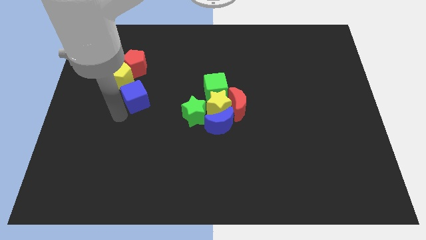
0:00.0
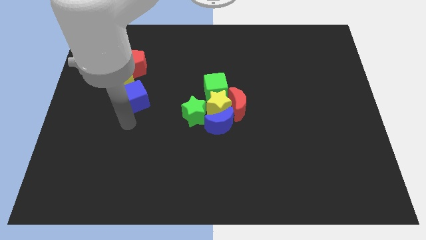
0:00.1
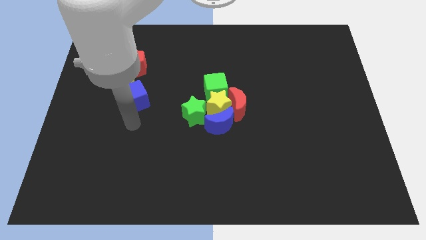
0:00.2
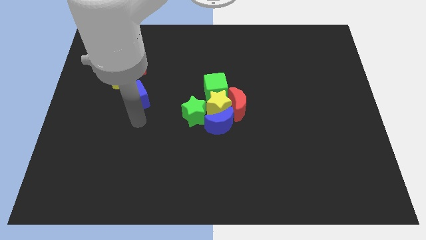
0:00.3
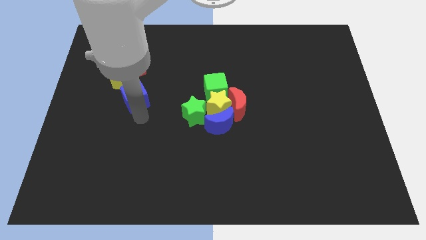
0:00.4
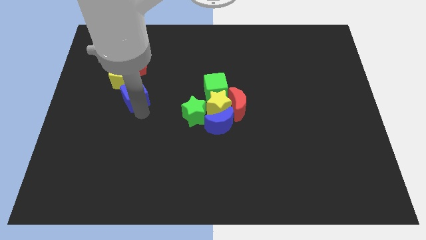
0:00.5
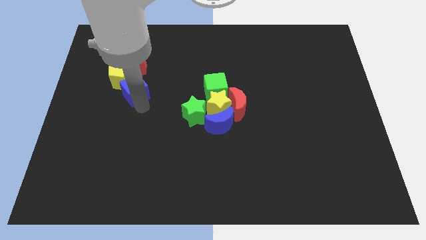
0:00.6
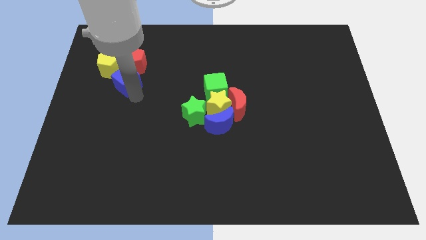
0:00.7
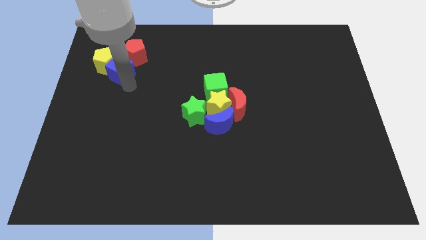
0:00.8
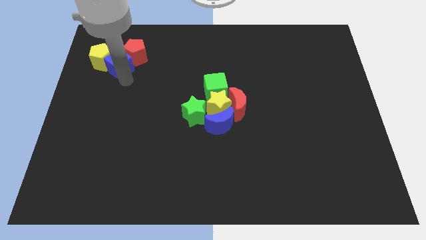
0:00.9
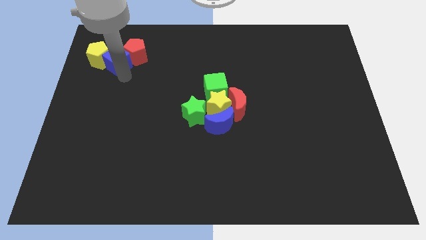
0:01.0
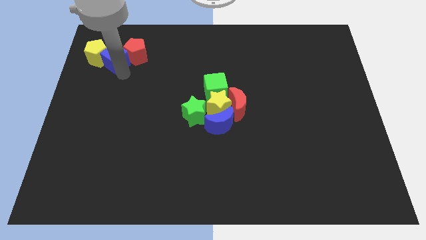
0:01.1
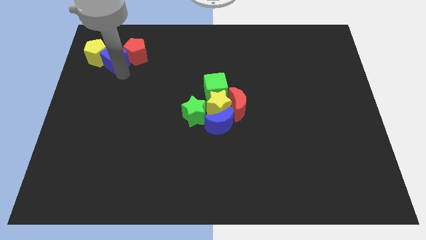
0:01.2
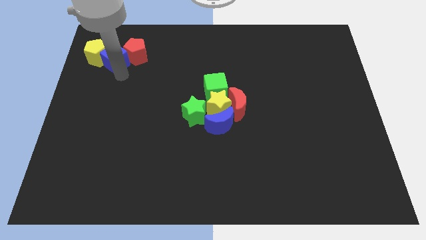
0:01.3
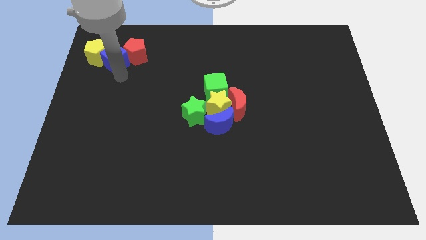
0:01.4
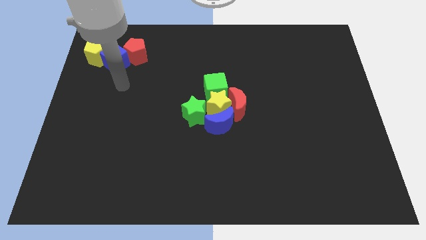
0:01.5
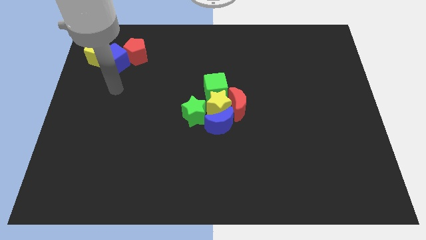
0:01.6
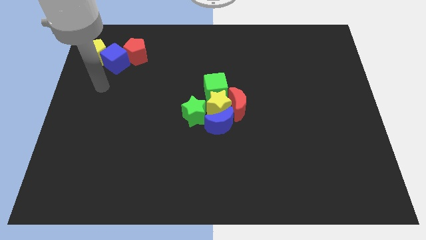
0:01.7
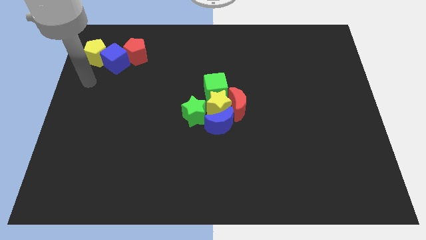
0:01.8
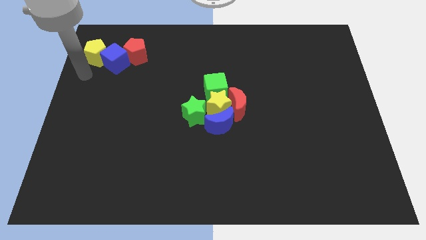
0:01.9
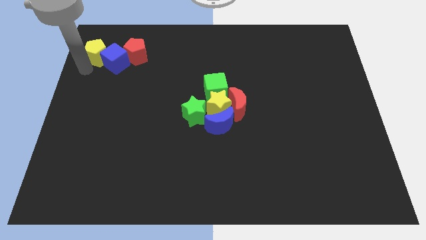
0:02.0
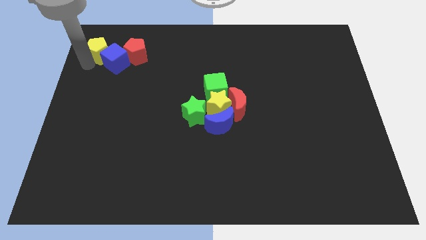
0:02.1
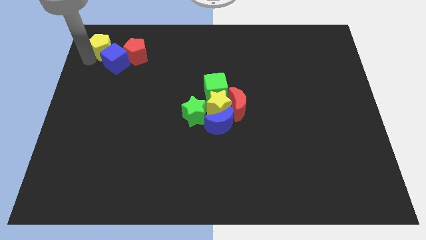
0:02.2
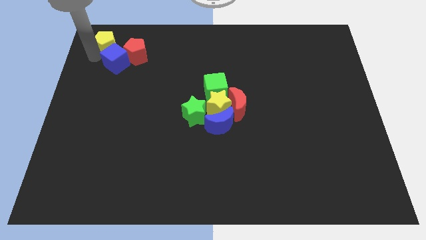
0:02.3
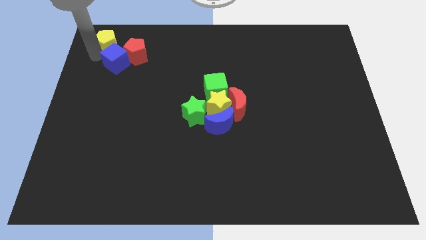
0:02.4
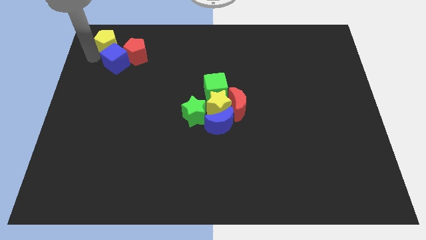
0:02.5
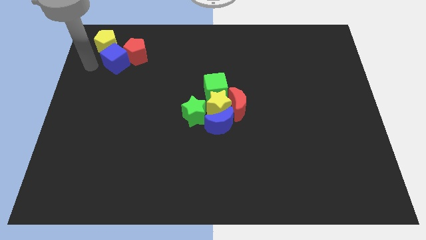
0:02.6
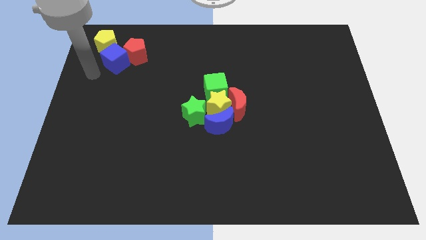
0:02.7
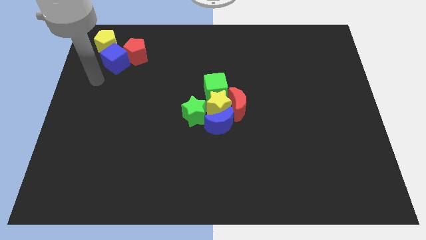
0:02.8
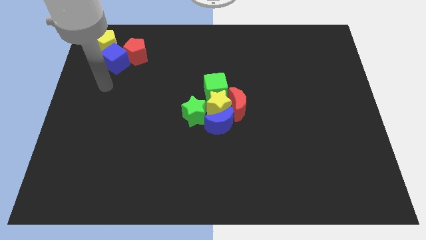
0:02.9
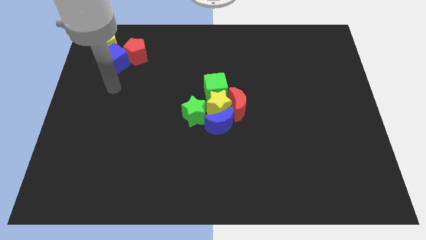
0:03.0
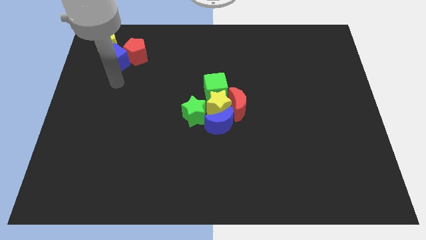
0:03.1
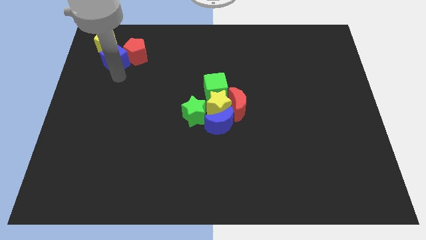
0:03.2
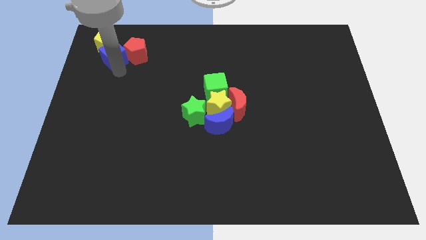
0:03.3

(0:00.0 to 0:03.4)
push the blue cube slightly upwards

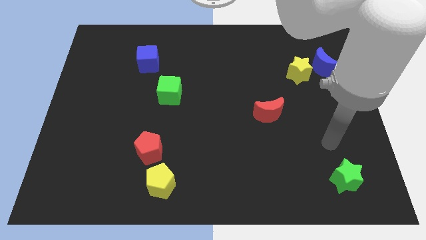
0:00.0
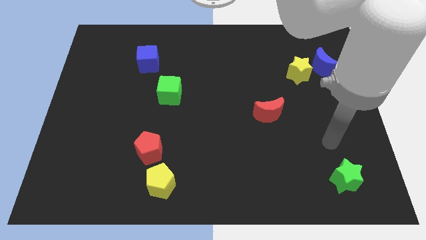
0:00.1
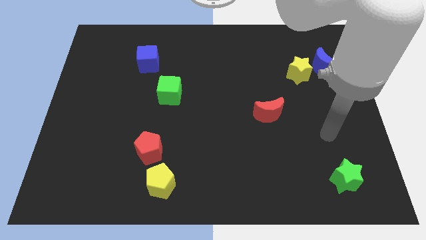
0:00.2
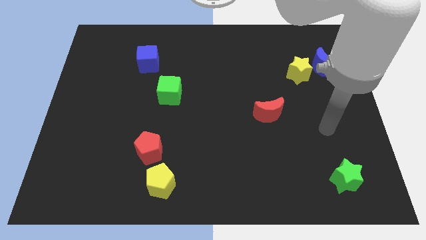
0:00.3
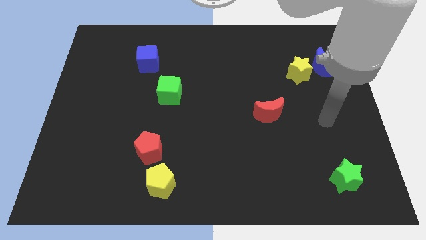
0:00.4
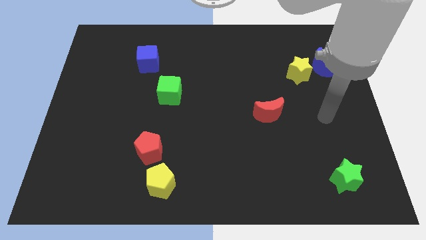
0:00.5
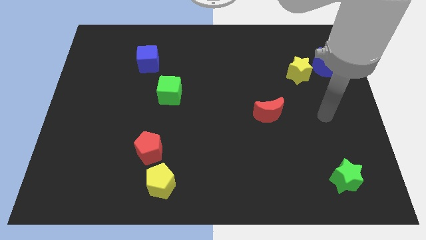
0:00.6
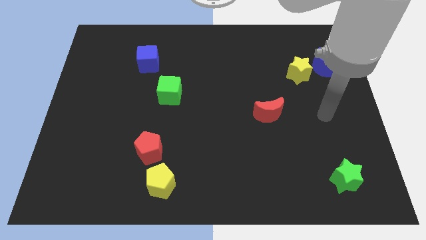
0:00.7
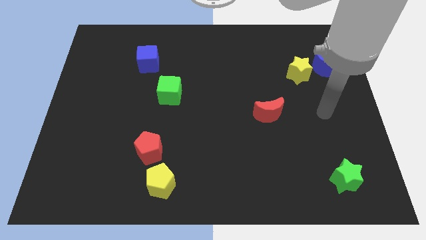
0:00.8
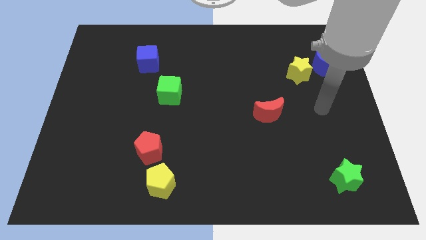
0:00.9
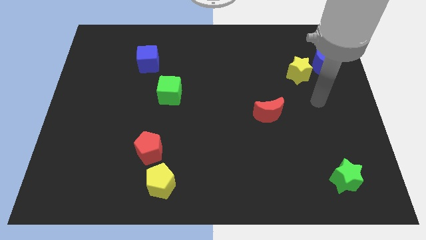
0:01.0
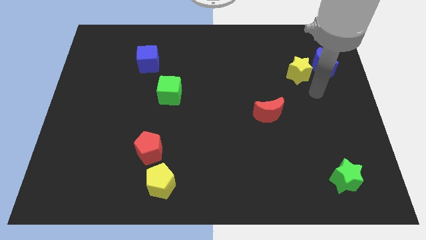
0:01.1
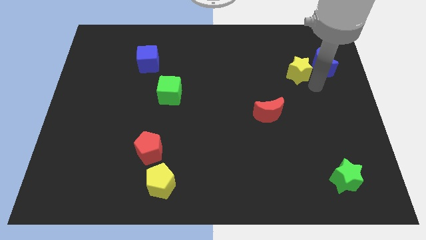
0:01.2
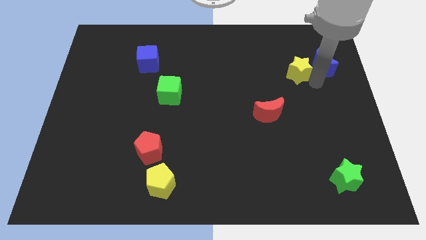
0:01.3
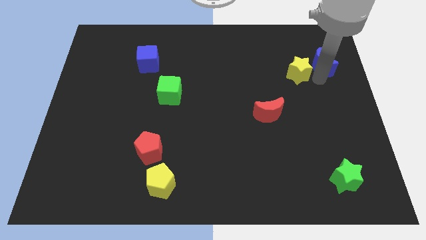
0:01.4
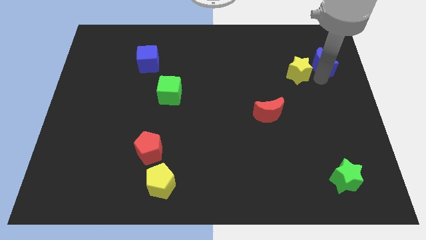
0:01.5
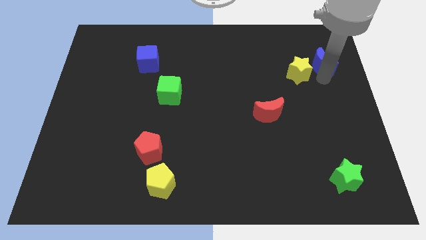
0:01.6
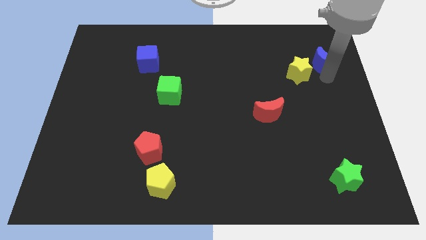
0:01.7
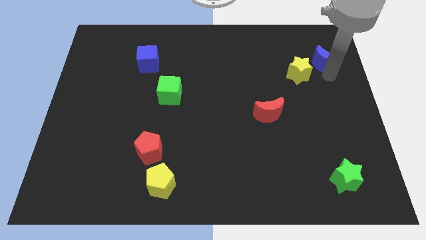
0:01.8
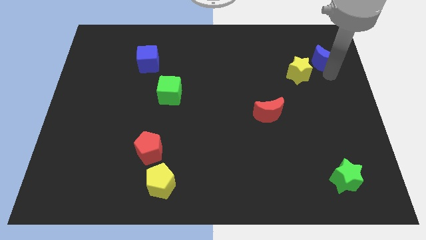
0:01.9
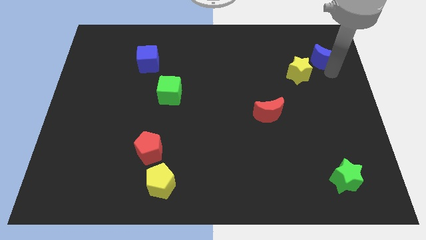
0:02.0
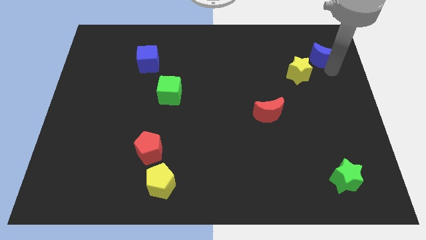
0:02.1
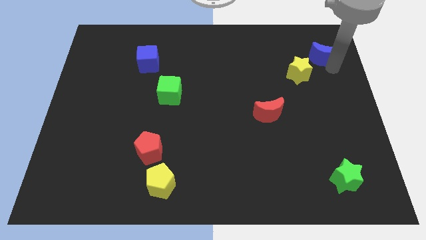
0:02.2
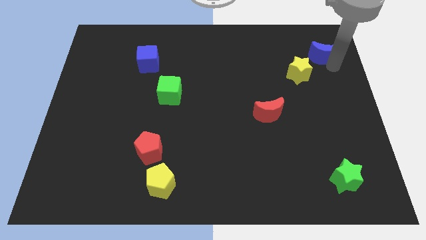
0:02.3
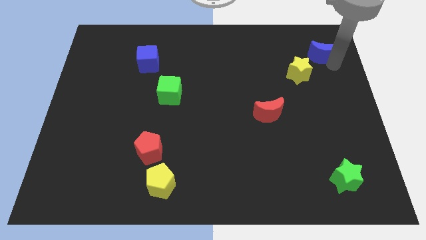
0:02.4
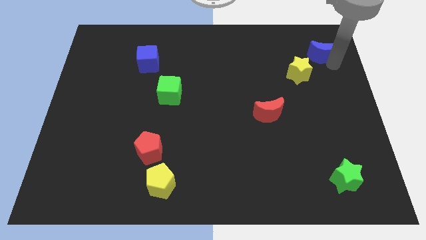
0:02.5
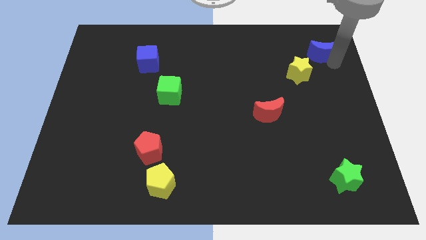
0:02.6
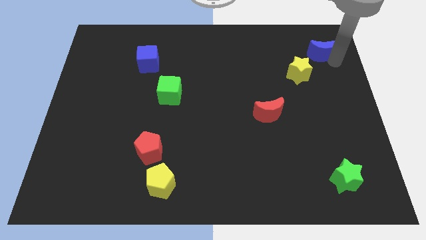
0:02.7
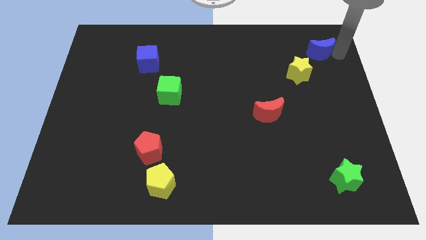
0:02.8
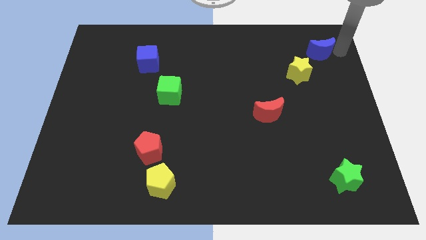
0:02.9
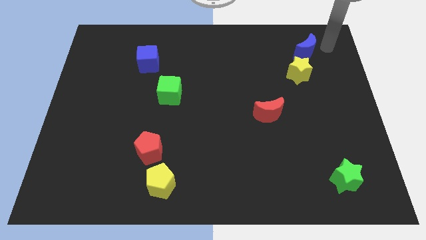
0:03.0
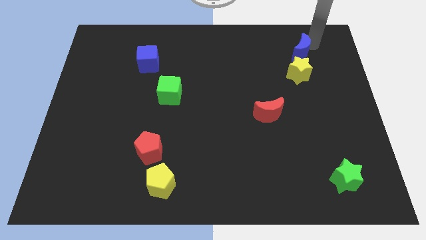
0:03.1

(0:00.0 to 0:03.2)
push the blue moon up slightly

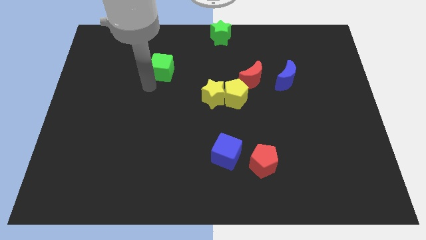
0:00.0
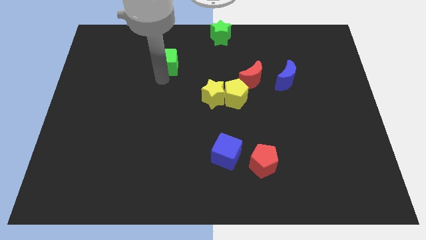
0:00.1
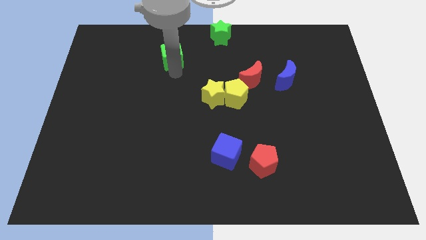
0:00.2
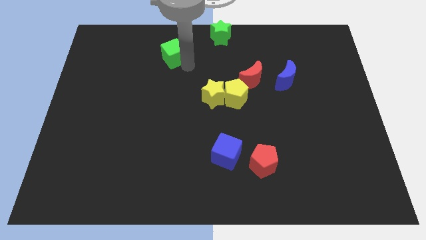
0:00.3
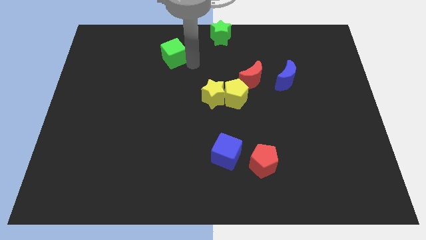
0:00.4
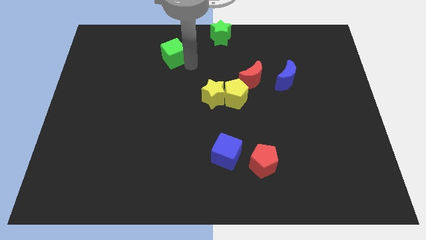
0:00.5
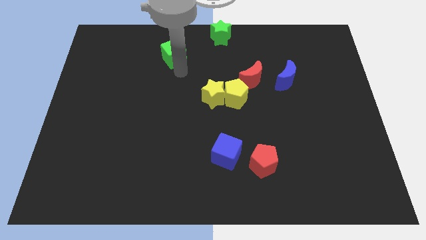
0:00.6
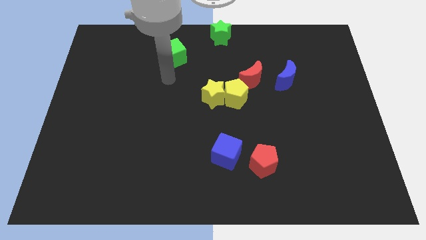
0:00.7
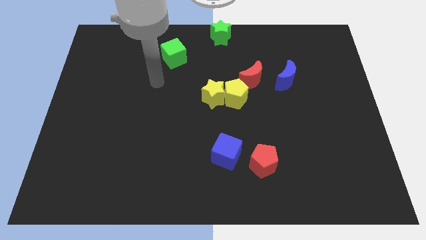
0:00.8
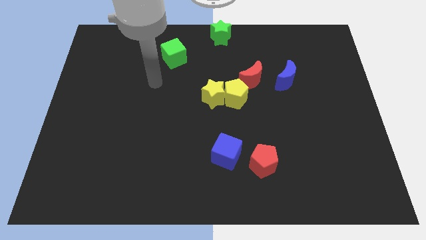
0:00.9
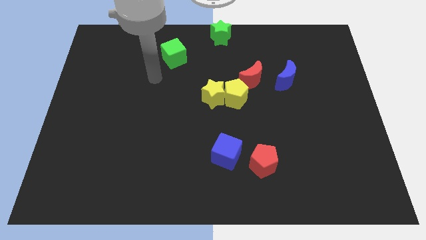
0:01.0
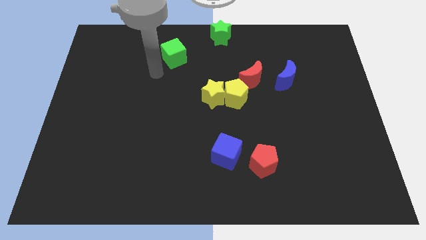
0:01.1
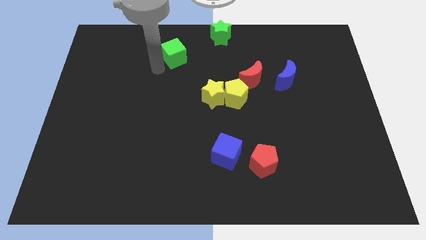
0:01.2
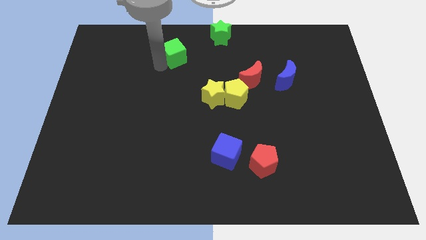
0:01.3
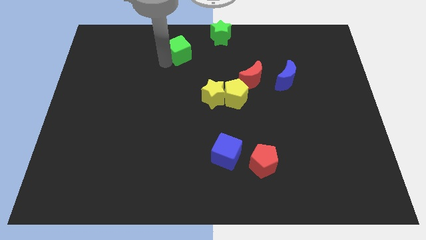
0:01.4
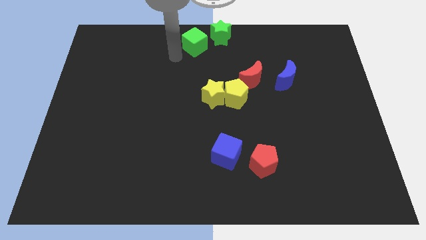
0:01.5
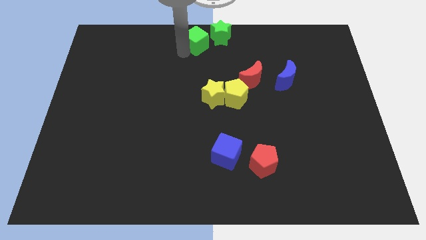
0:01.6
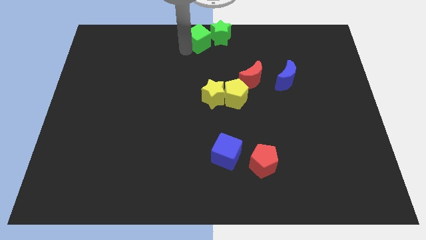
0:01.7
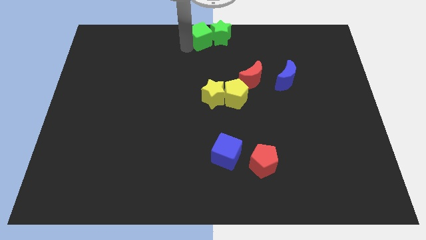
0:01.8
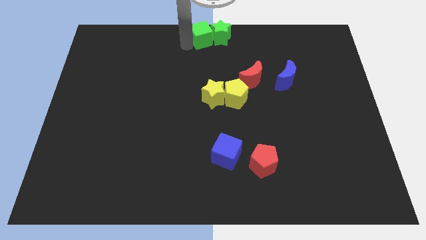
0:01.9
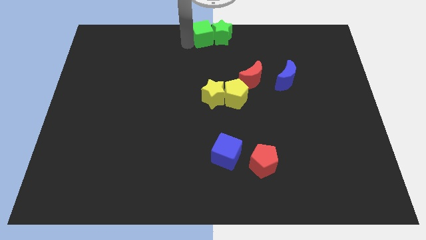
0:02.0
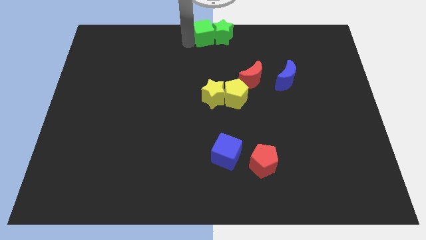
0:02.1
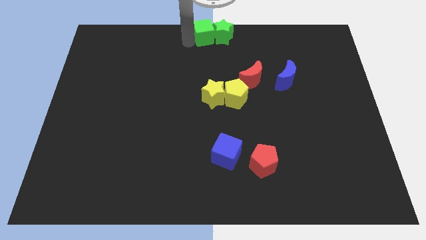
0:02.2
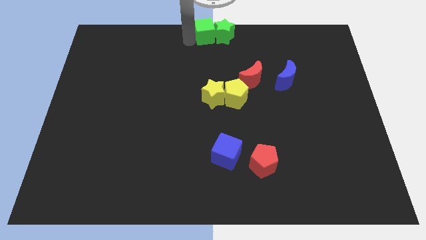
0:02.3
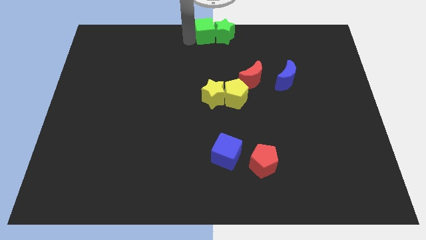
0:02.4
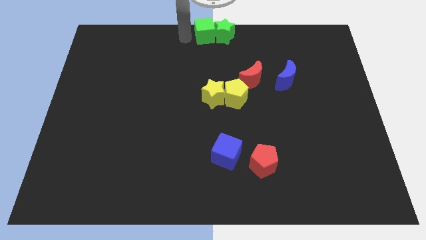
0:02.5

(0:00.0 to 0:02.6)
place green block close to green star
